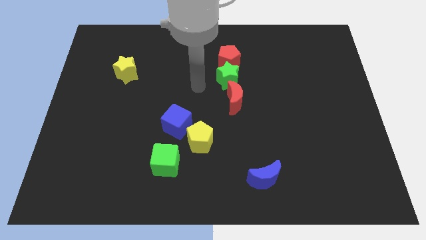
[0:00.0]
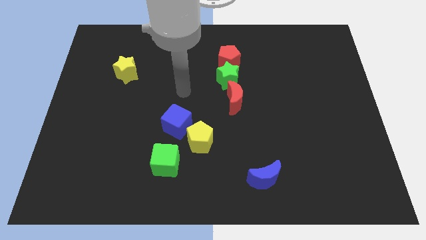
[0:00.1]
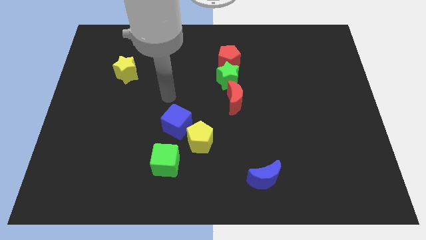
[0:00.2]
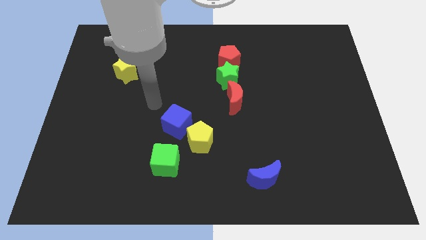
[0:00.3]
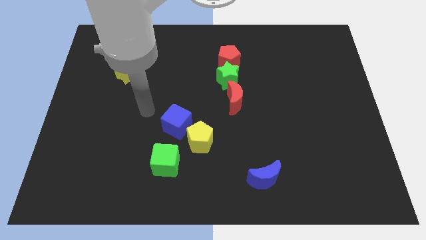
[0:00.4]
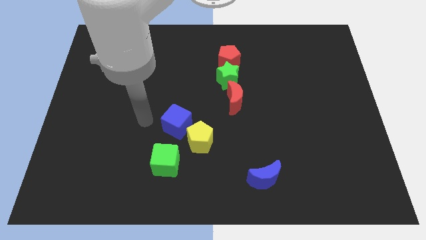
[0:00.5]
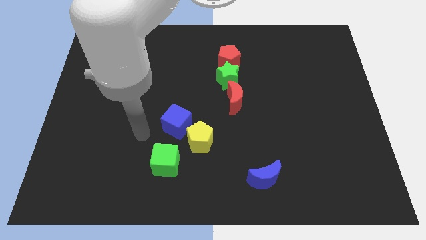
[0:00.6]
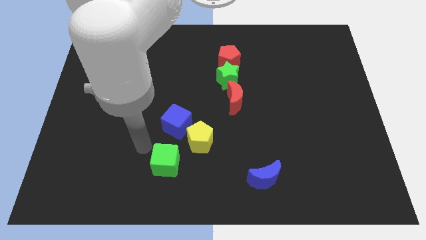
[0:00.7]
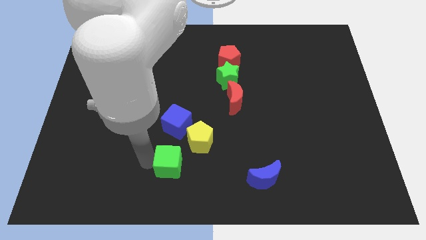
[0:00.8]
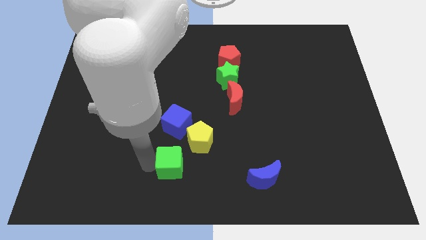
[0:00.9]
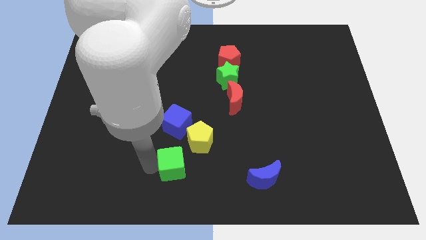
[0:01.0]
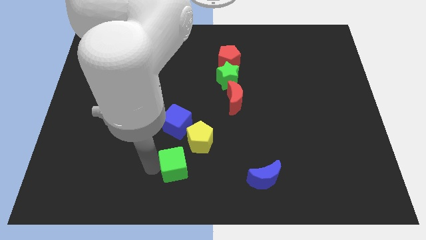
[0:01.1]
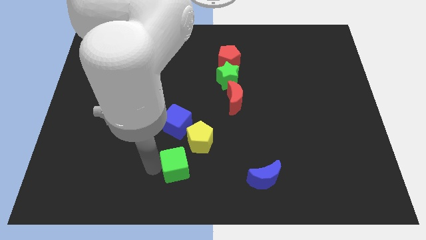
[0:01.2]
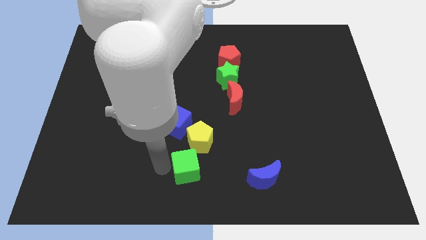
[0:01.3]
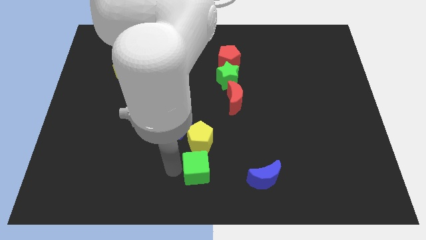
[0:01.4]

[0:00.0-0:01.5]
move green cube to the bottom of yellow pentagon

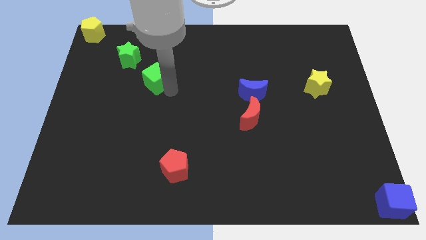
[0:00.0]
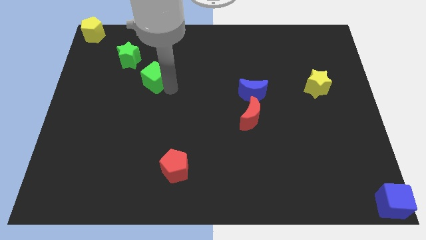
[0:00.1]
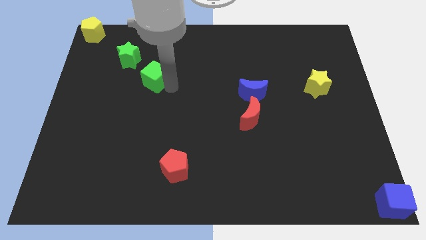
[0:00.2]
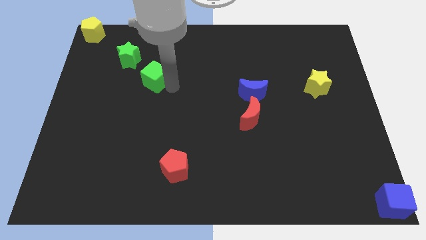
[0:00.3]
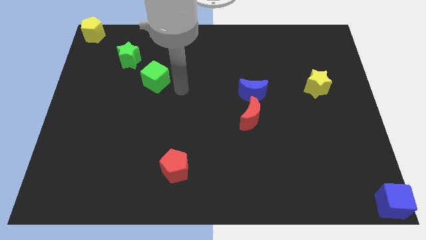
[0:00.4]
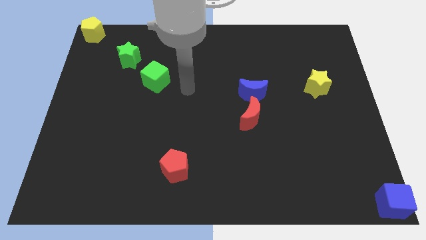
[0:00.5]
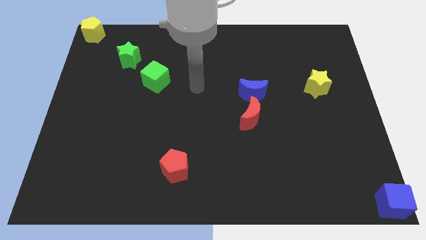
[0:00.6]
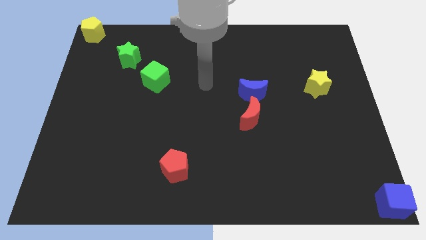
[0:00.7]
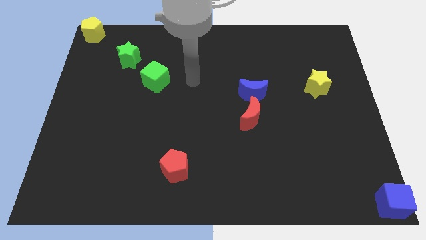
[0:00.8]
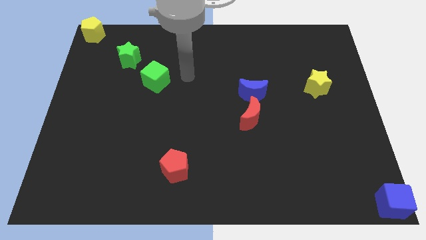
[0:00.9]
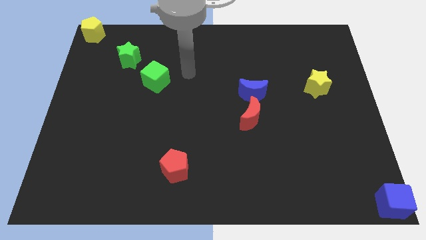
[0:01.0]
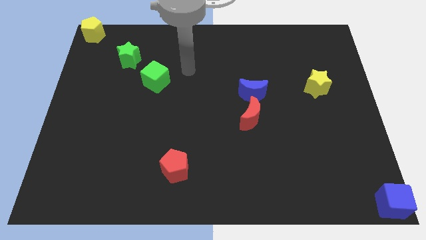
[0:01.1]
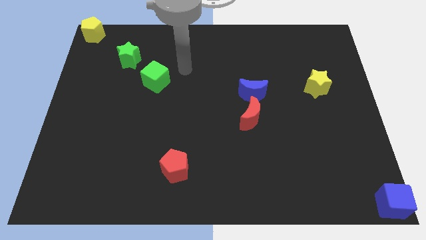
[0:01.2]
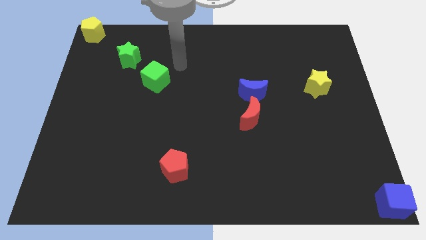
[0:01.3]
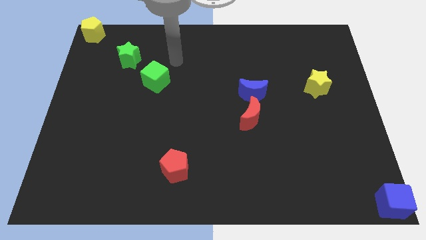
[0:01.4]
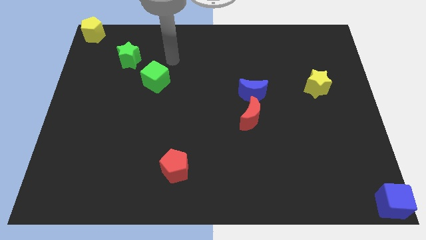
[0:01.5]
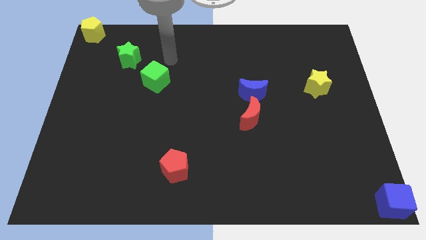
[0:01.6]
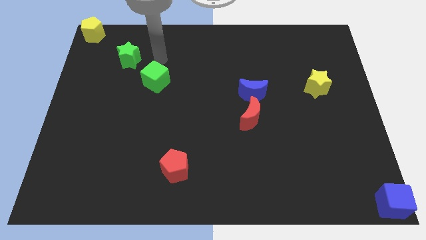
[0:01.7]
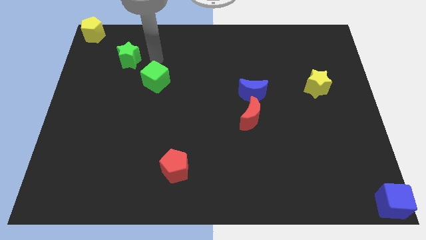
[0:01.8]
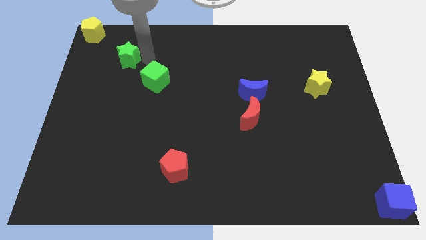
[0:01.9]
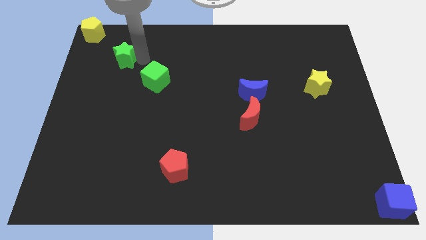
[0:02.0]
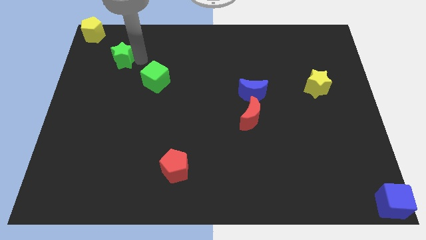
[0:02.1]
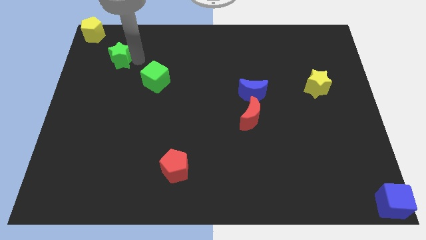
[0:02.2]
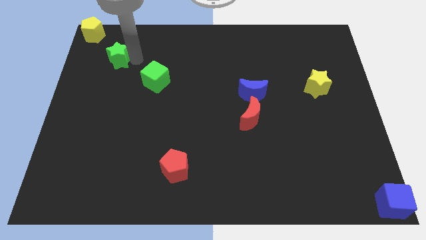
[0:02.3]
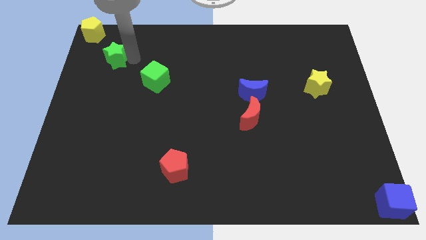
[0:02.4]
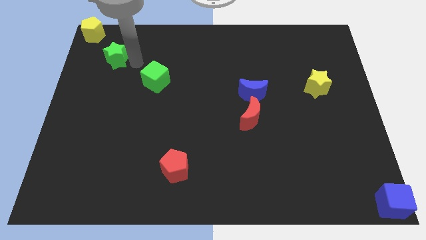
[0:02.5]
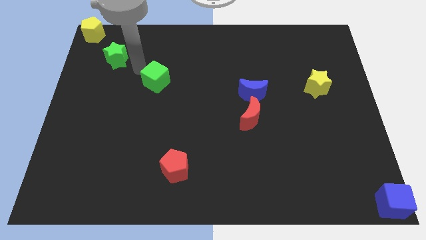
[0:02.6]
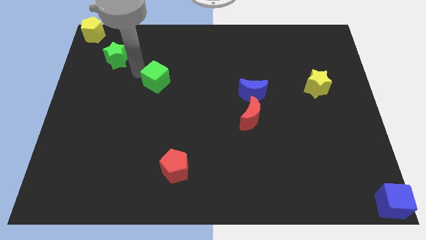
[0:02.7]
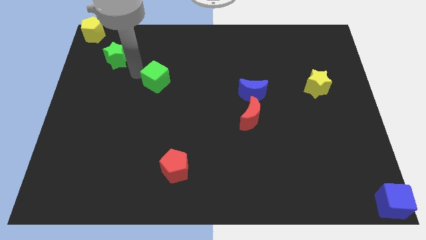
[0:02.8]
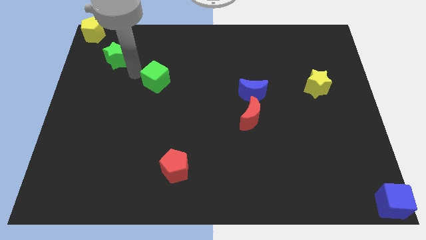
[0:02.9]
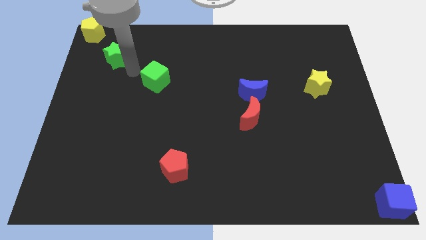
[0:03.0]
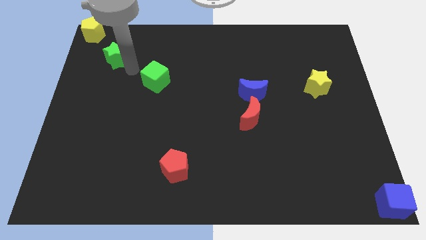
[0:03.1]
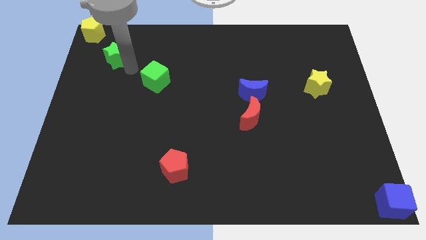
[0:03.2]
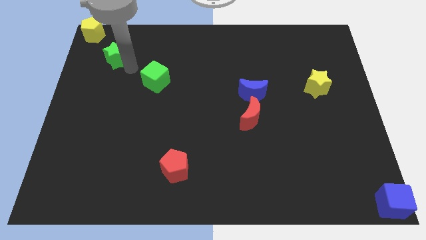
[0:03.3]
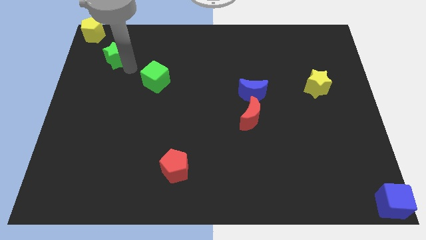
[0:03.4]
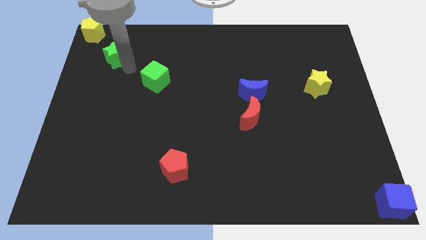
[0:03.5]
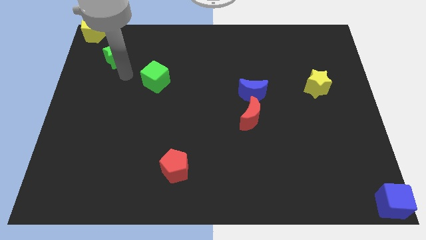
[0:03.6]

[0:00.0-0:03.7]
point your arm between green star and green cube

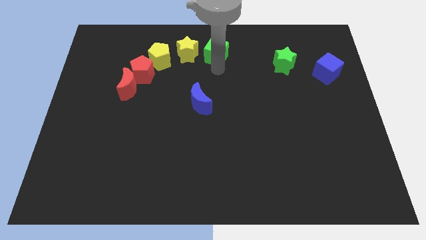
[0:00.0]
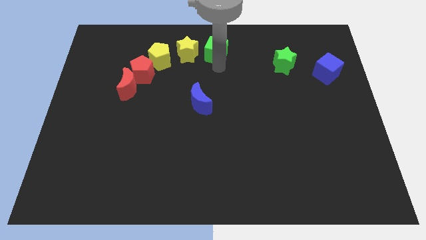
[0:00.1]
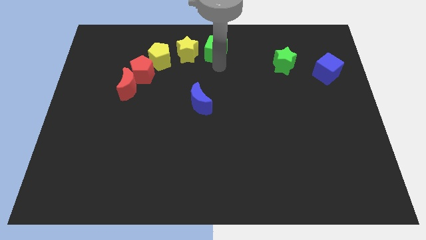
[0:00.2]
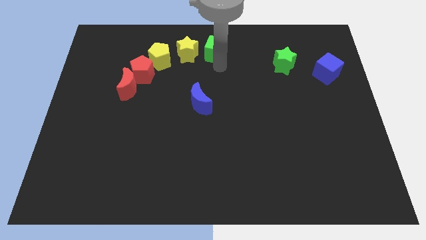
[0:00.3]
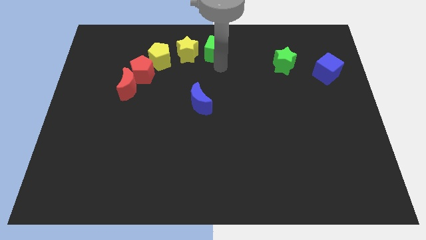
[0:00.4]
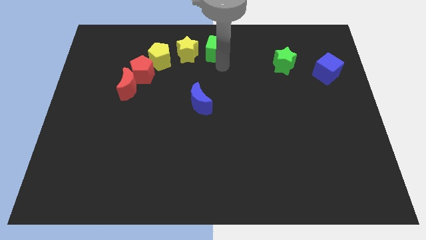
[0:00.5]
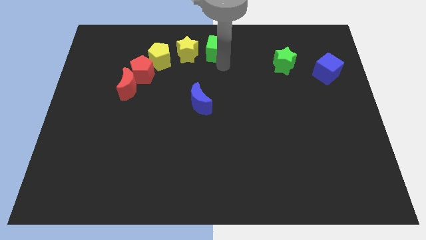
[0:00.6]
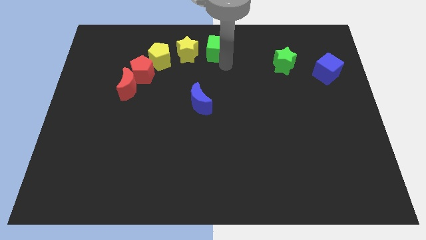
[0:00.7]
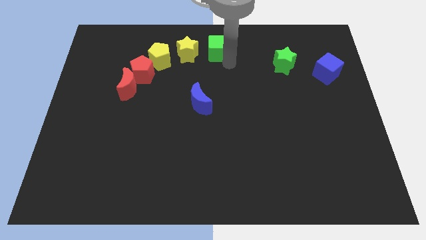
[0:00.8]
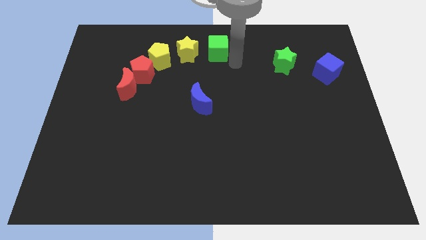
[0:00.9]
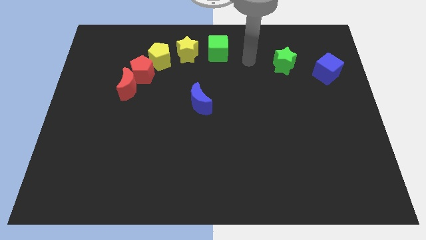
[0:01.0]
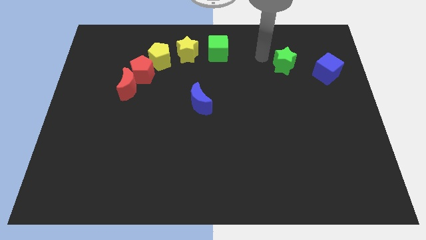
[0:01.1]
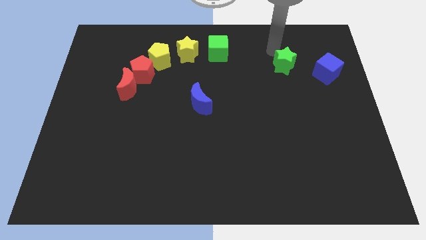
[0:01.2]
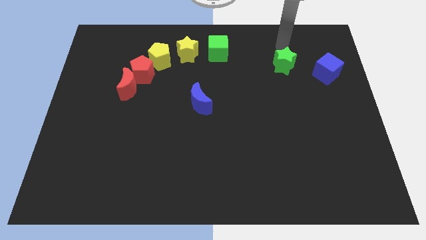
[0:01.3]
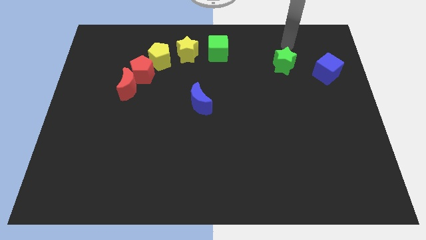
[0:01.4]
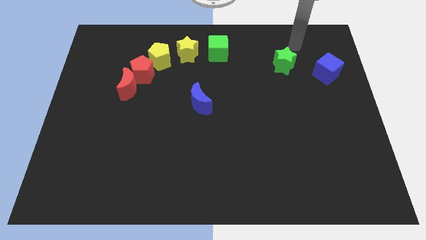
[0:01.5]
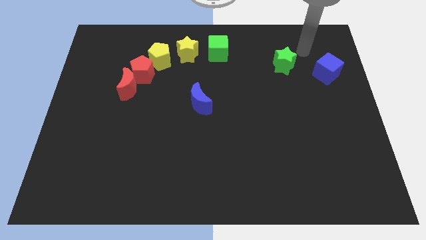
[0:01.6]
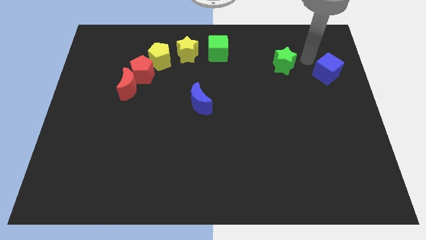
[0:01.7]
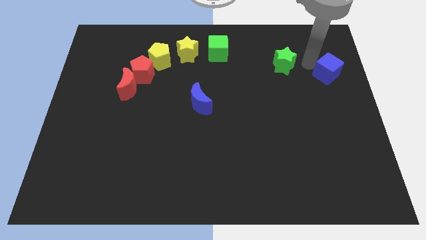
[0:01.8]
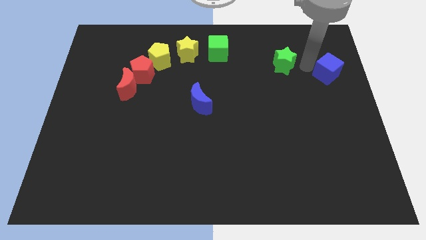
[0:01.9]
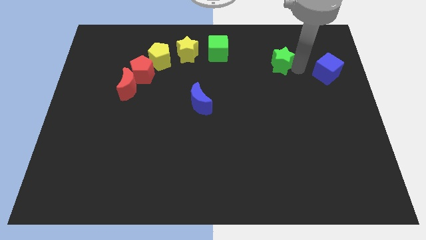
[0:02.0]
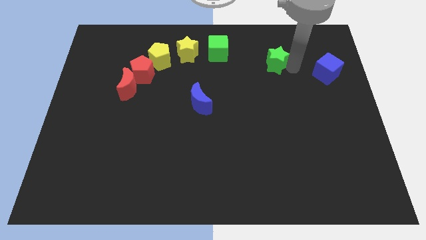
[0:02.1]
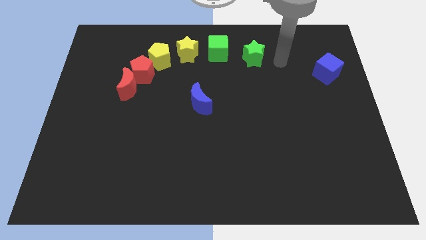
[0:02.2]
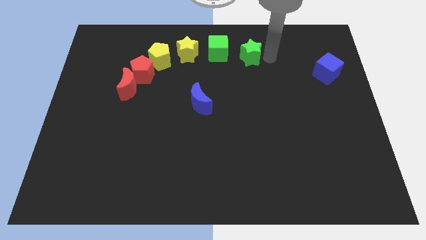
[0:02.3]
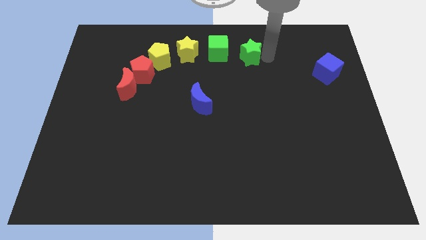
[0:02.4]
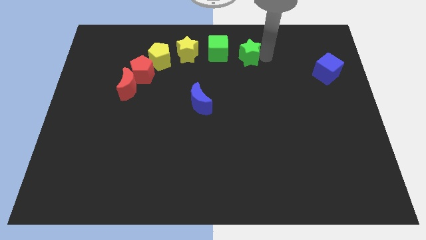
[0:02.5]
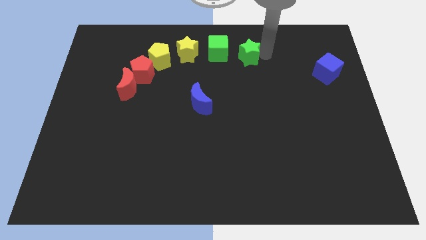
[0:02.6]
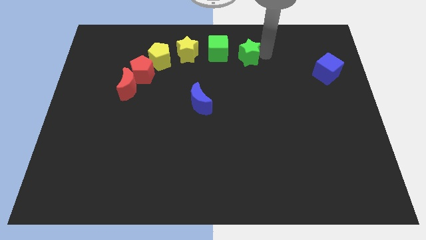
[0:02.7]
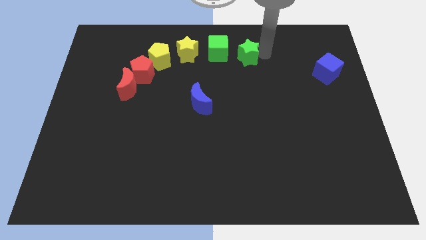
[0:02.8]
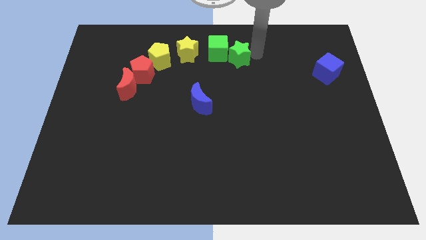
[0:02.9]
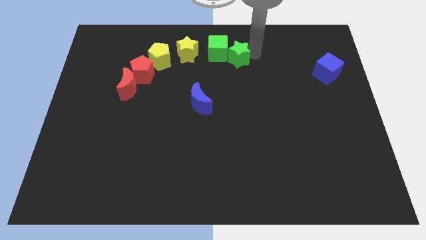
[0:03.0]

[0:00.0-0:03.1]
put the green blocks together

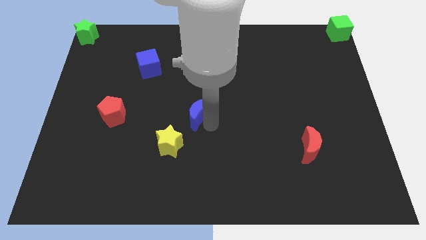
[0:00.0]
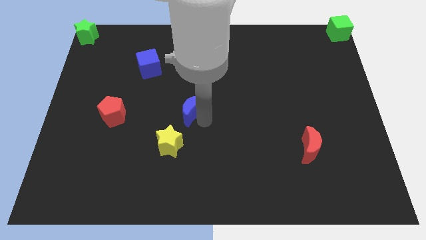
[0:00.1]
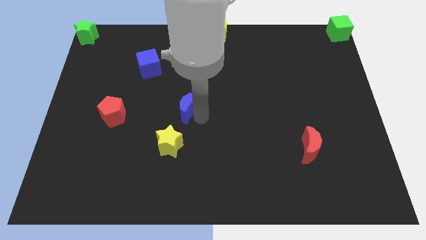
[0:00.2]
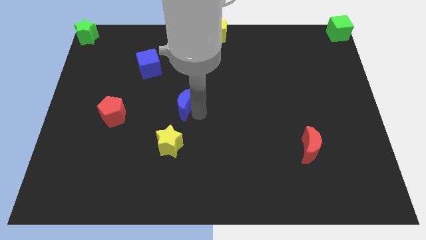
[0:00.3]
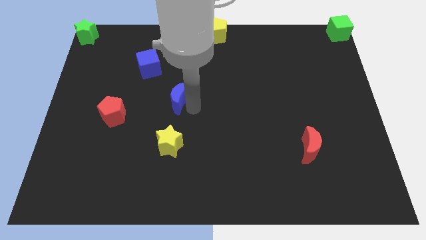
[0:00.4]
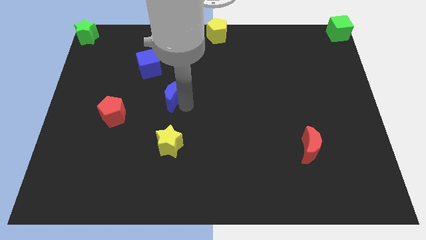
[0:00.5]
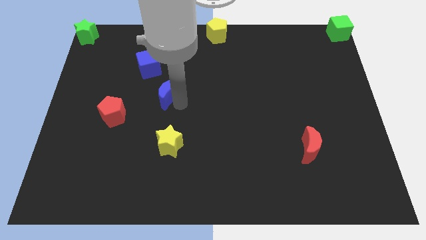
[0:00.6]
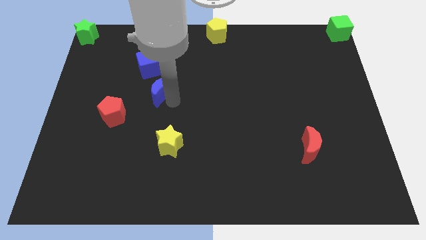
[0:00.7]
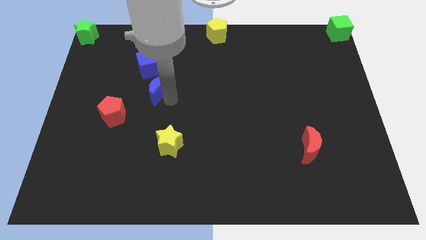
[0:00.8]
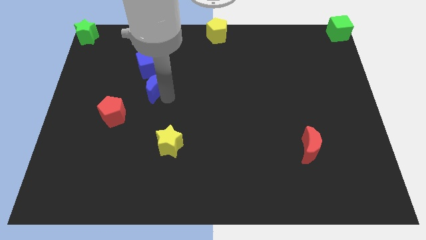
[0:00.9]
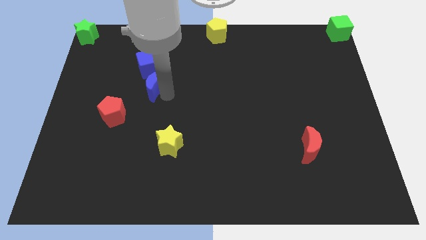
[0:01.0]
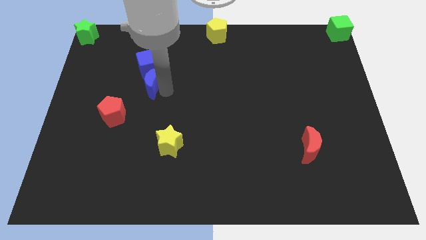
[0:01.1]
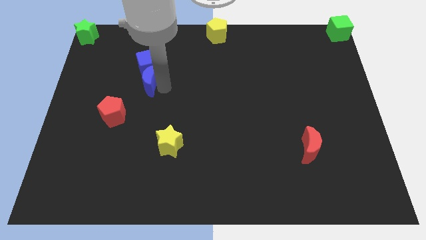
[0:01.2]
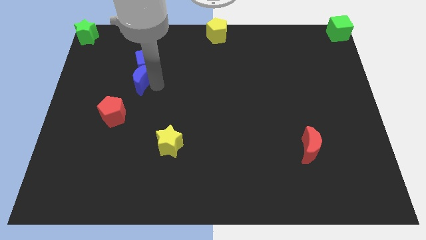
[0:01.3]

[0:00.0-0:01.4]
place the blue crescent below the blue cube
